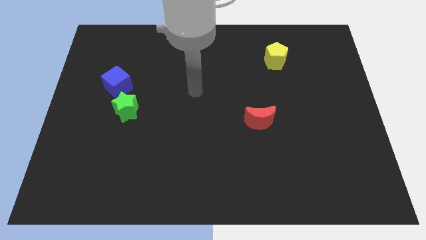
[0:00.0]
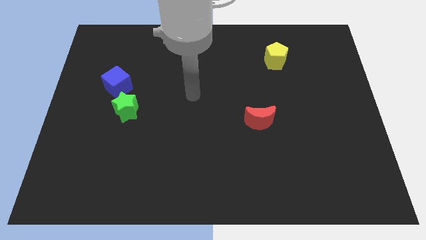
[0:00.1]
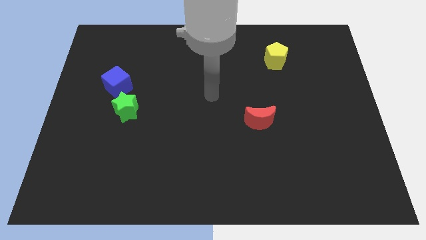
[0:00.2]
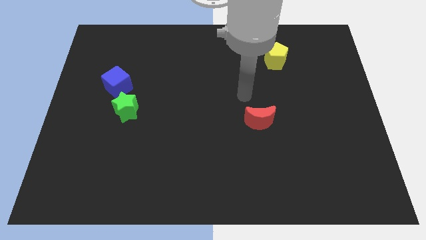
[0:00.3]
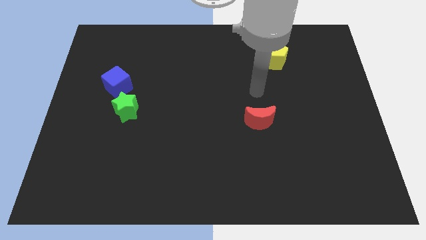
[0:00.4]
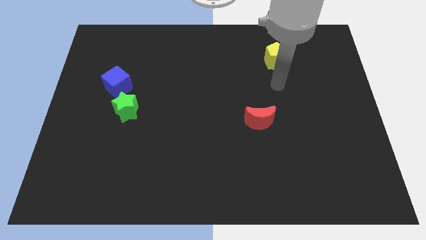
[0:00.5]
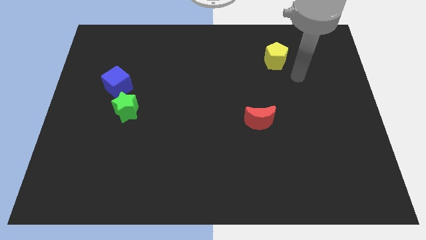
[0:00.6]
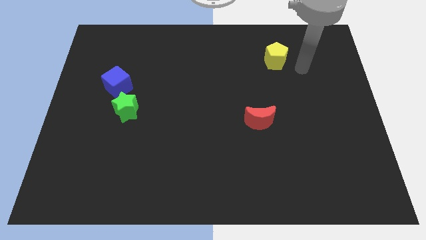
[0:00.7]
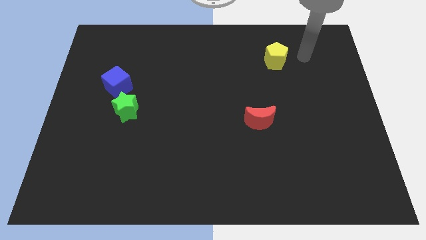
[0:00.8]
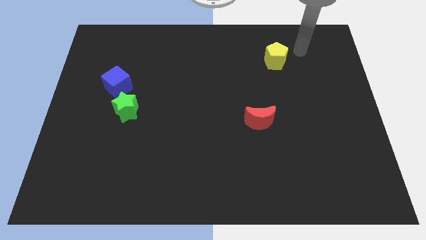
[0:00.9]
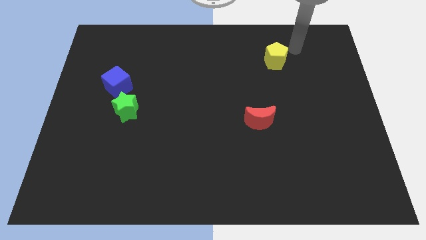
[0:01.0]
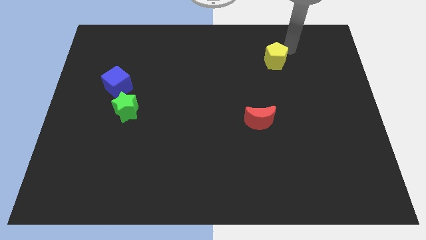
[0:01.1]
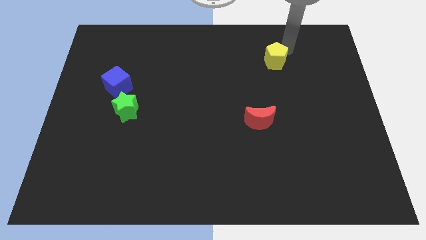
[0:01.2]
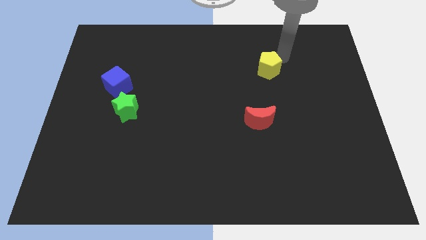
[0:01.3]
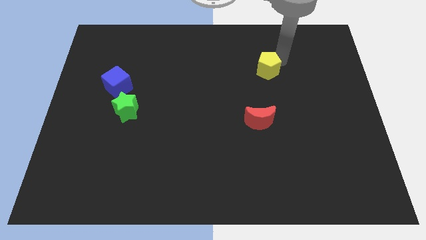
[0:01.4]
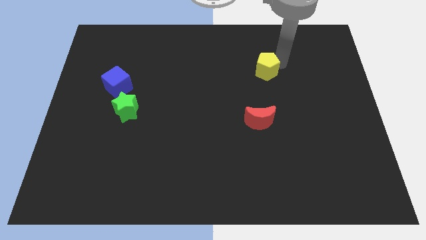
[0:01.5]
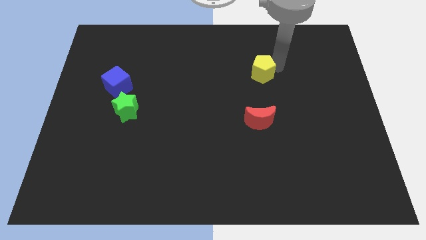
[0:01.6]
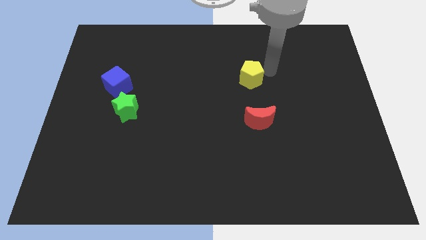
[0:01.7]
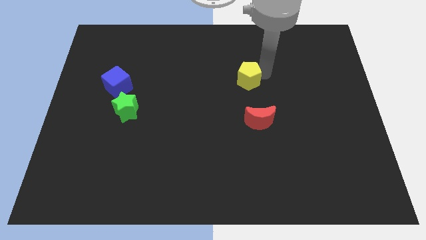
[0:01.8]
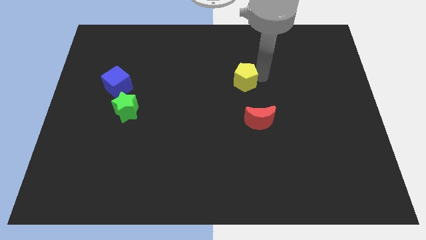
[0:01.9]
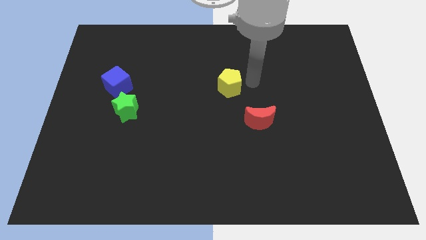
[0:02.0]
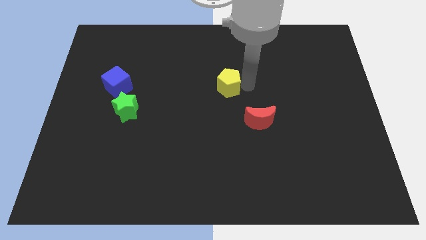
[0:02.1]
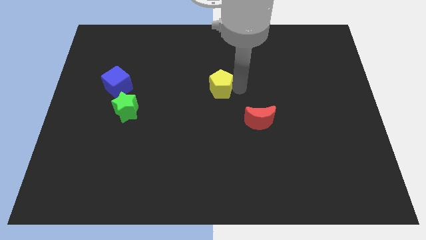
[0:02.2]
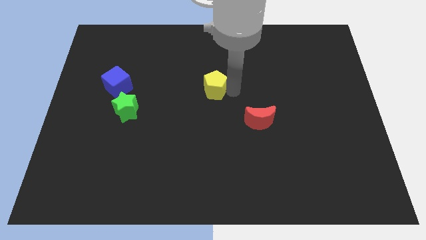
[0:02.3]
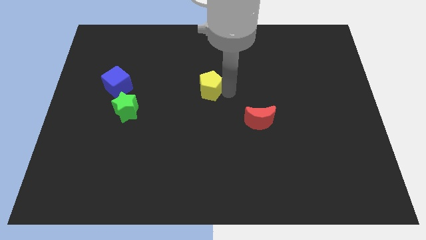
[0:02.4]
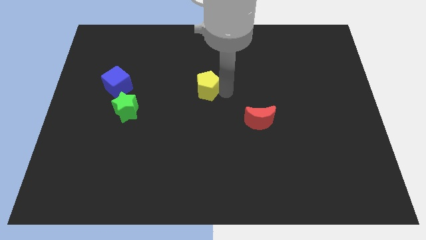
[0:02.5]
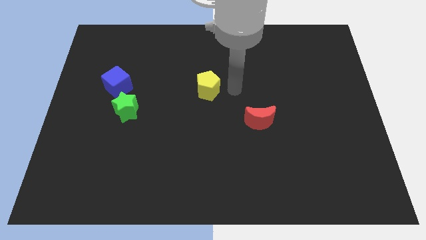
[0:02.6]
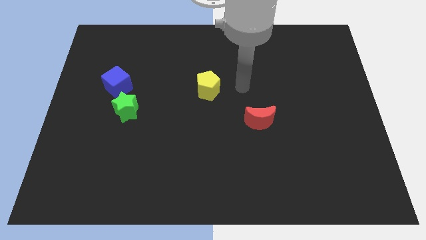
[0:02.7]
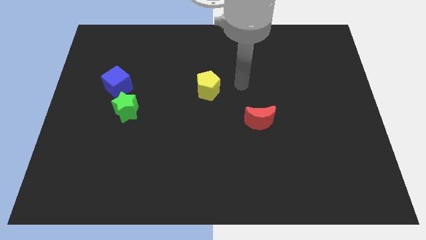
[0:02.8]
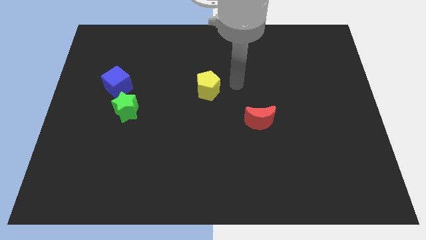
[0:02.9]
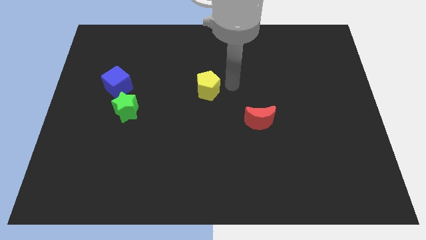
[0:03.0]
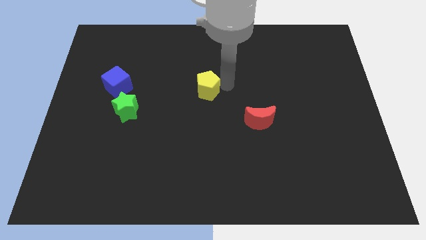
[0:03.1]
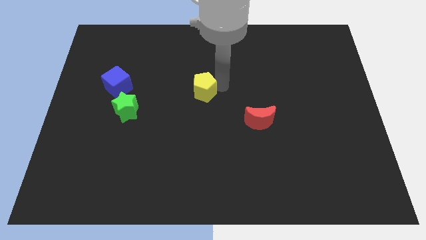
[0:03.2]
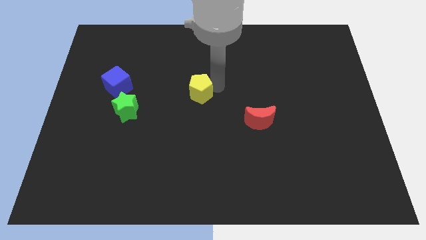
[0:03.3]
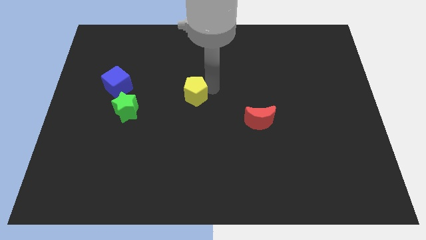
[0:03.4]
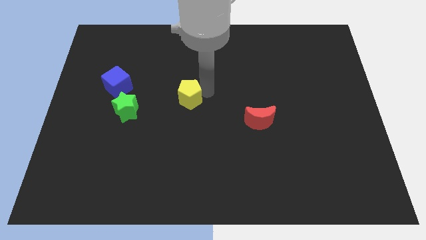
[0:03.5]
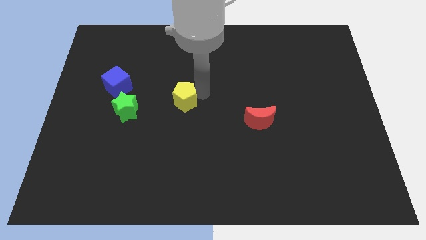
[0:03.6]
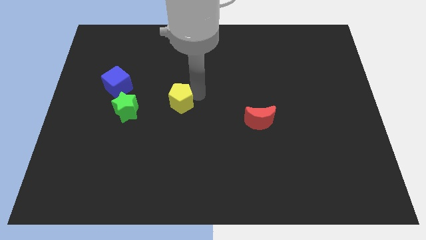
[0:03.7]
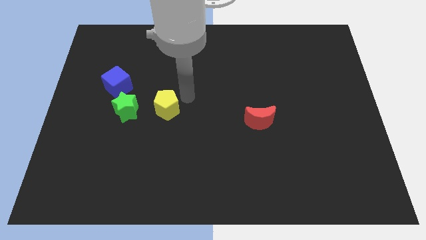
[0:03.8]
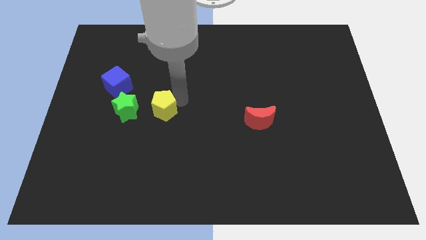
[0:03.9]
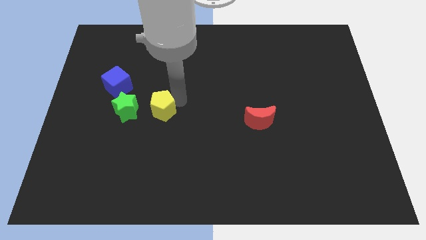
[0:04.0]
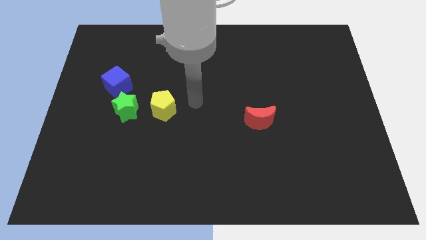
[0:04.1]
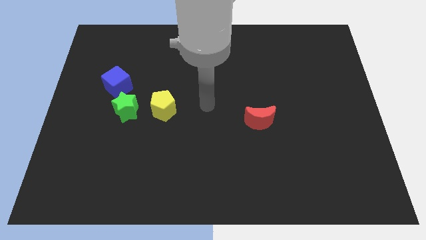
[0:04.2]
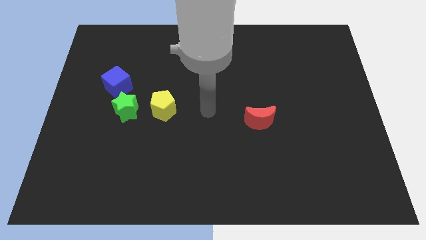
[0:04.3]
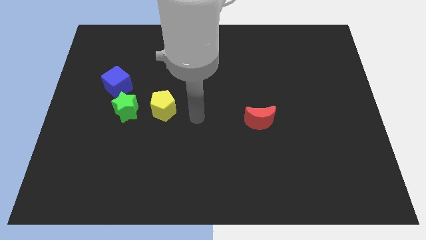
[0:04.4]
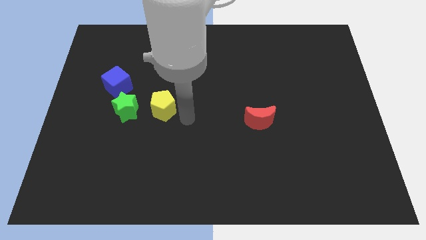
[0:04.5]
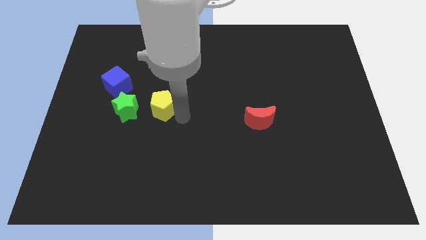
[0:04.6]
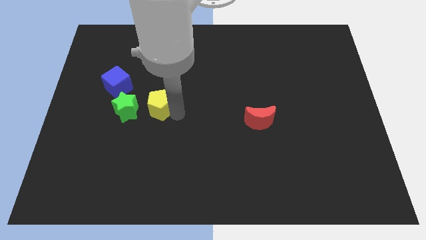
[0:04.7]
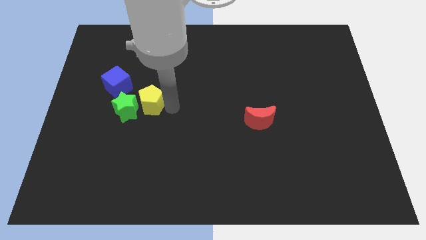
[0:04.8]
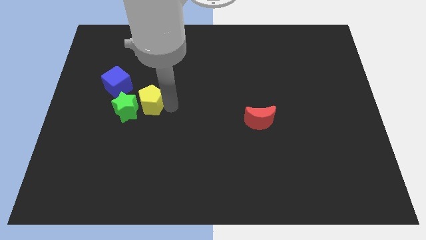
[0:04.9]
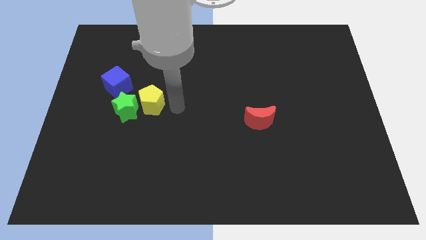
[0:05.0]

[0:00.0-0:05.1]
push the yellow block towards the green block

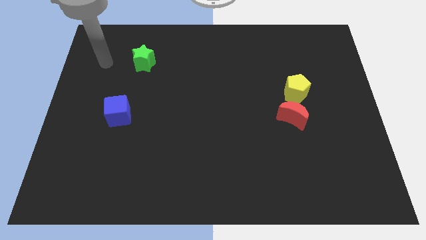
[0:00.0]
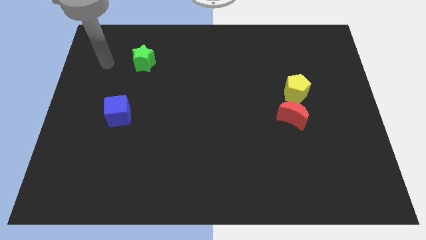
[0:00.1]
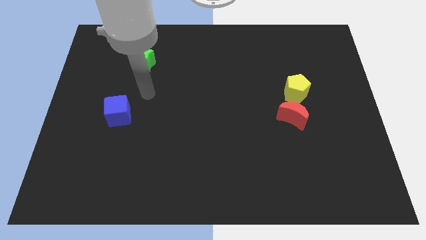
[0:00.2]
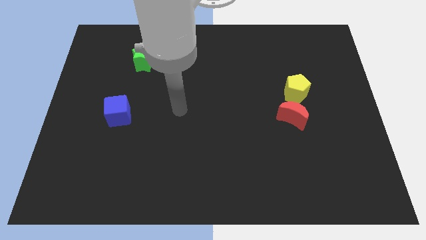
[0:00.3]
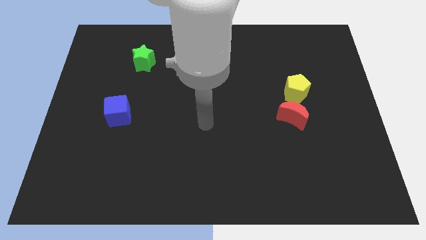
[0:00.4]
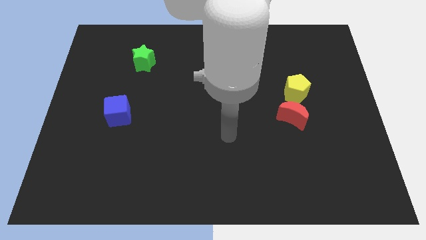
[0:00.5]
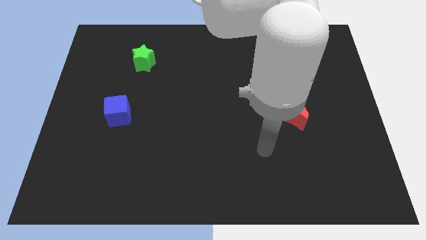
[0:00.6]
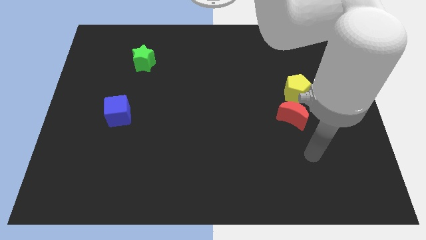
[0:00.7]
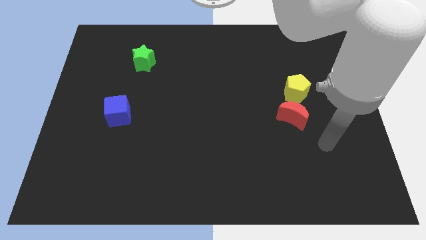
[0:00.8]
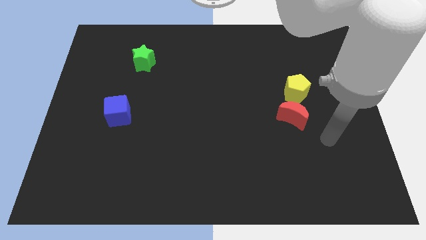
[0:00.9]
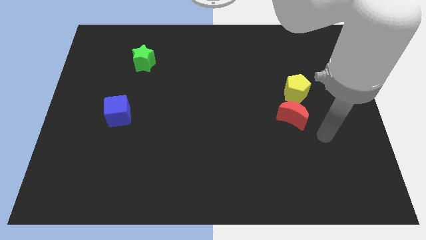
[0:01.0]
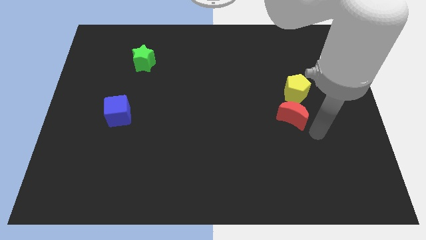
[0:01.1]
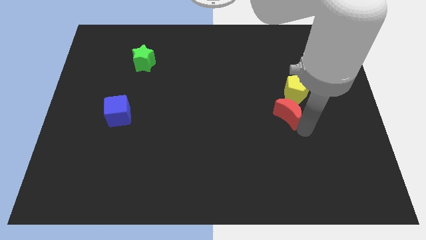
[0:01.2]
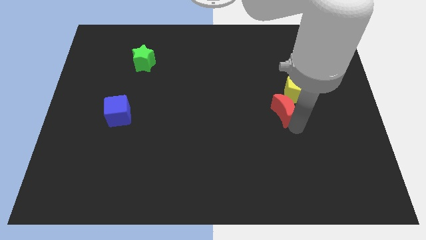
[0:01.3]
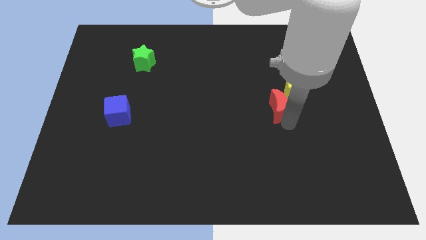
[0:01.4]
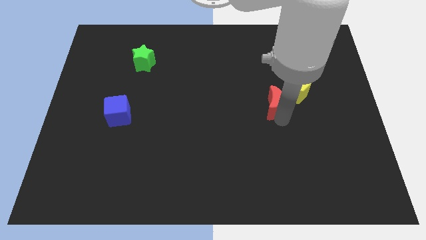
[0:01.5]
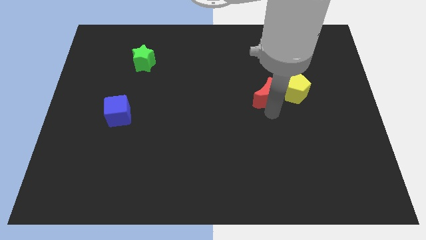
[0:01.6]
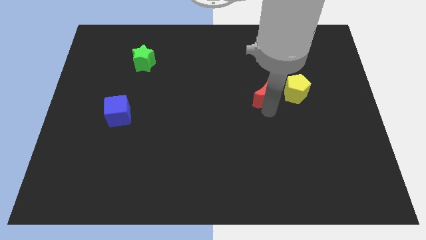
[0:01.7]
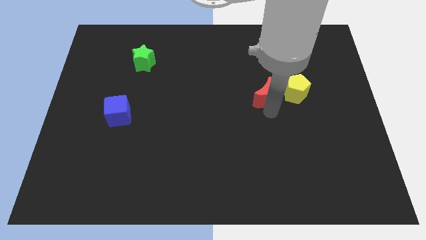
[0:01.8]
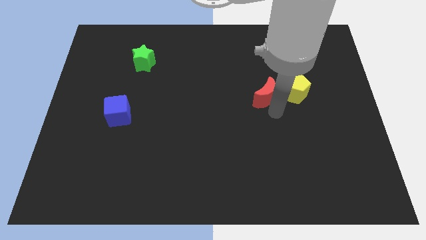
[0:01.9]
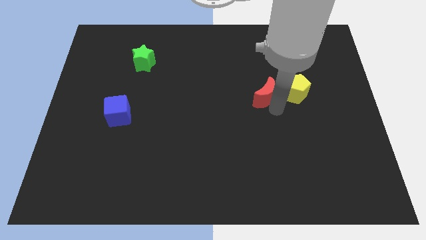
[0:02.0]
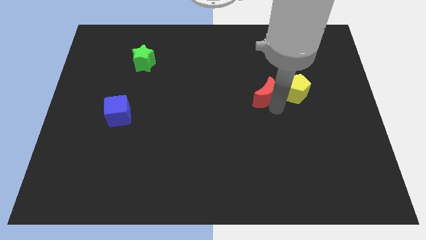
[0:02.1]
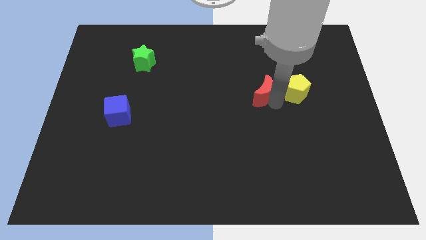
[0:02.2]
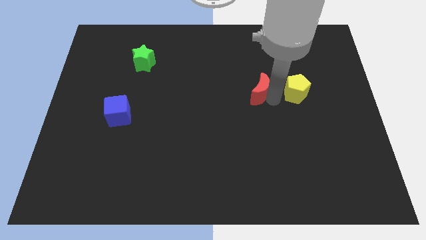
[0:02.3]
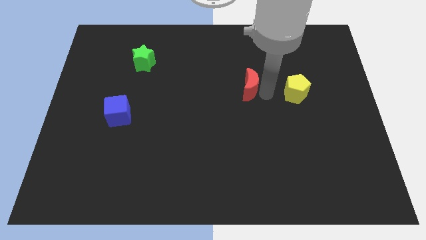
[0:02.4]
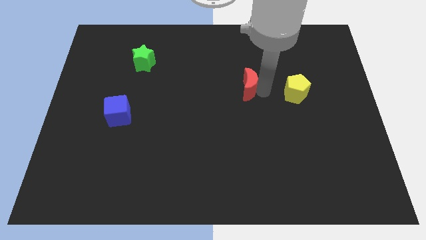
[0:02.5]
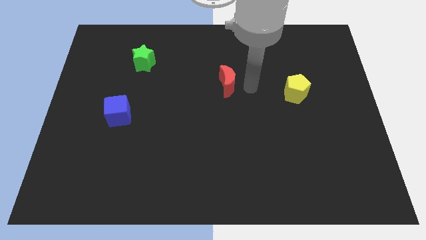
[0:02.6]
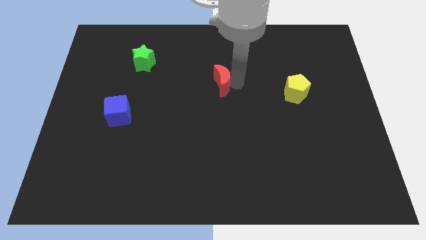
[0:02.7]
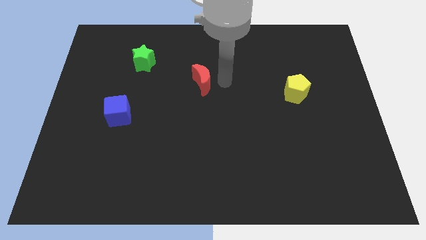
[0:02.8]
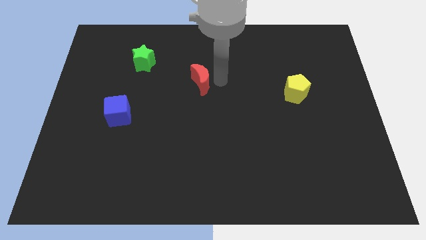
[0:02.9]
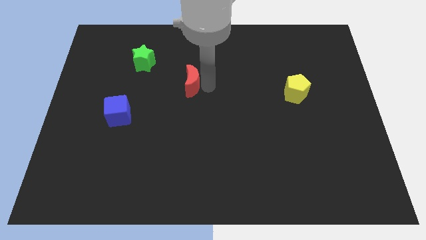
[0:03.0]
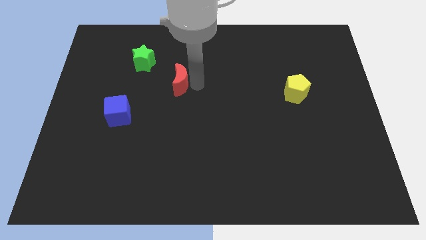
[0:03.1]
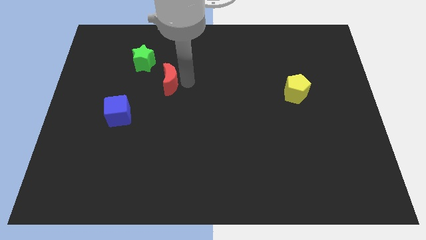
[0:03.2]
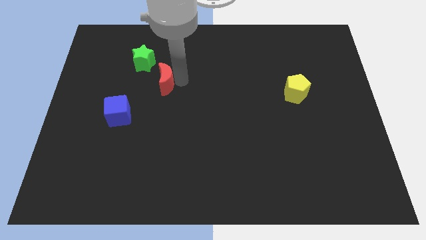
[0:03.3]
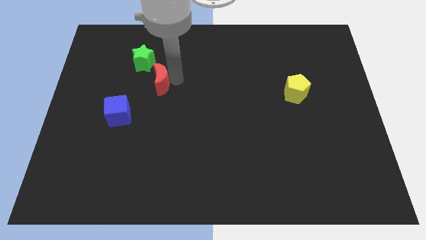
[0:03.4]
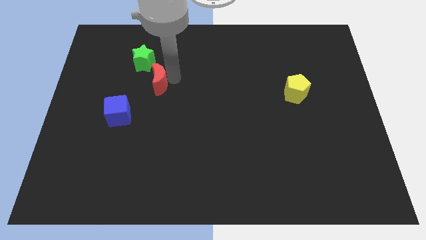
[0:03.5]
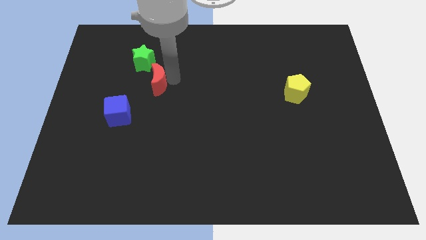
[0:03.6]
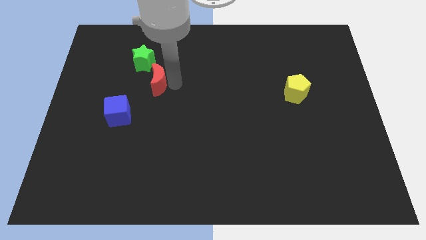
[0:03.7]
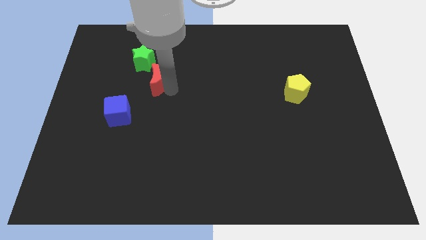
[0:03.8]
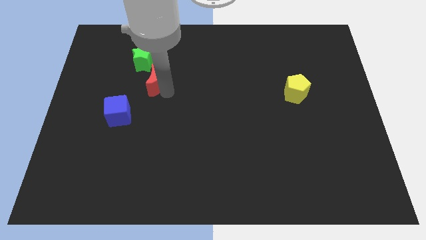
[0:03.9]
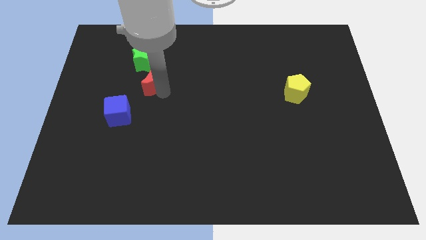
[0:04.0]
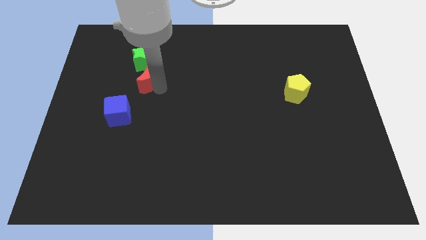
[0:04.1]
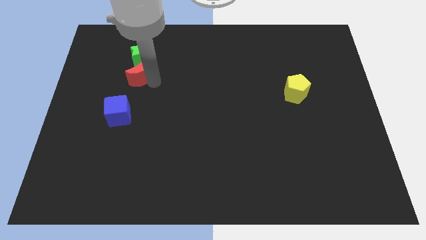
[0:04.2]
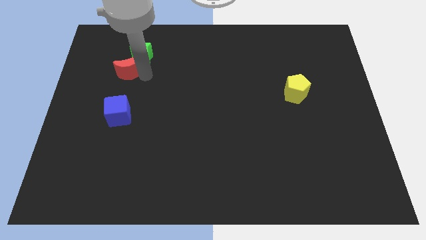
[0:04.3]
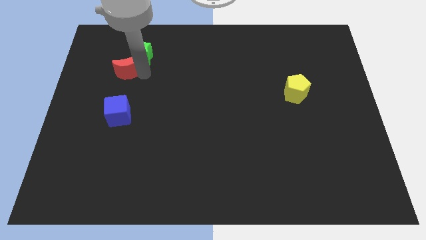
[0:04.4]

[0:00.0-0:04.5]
put the moon close to the star
